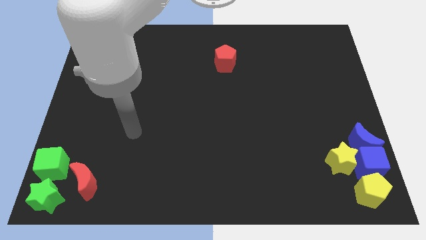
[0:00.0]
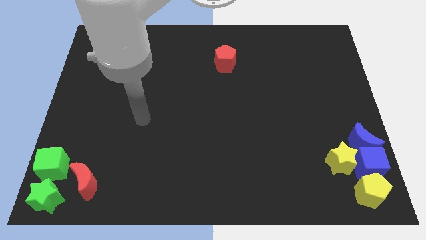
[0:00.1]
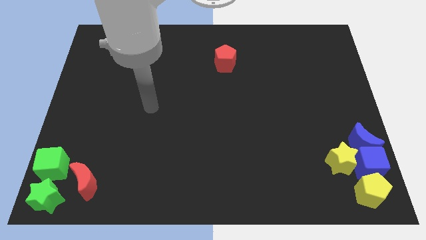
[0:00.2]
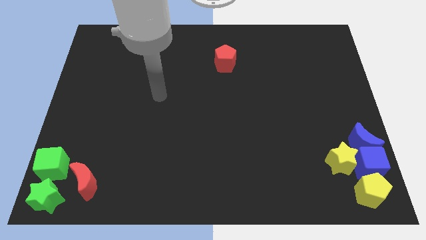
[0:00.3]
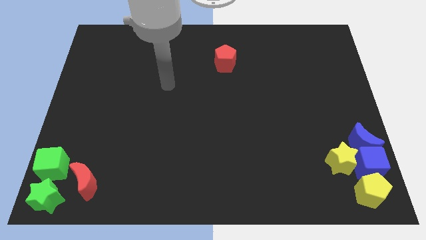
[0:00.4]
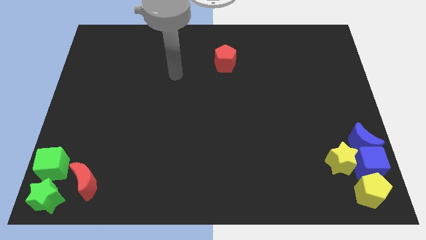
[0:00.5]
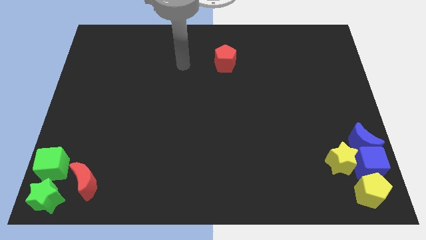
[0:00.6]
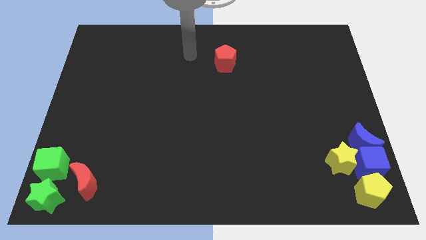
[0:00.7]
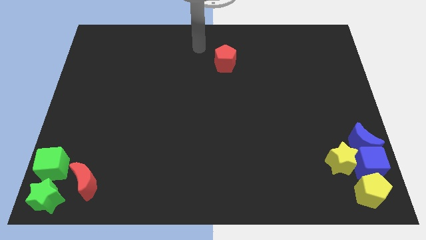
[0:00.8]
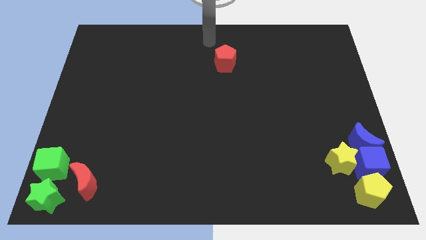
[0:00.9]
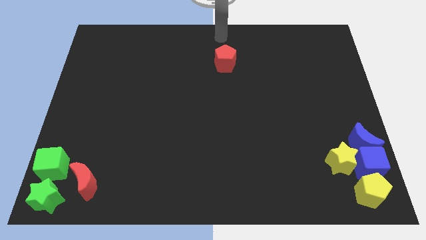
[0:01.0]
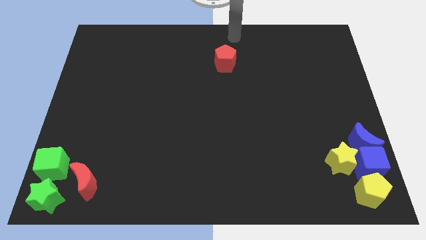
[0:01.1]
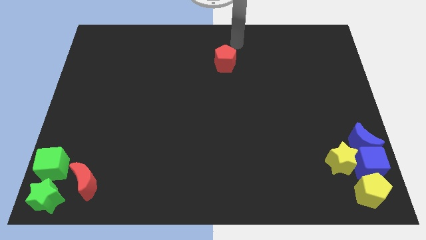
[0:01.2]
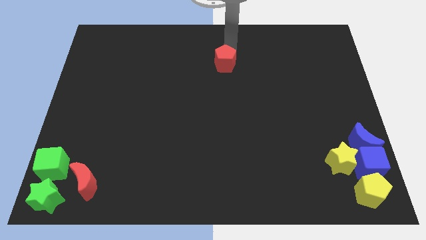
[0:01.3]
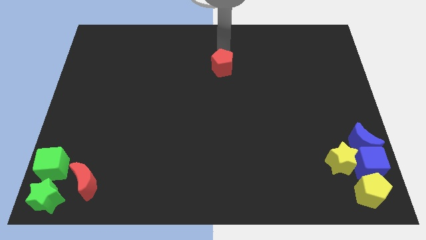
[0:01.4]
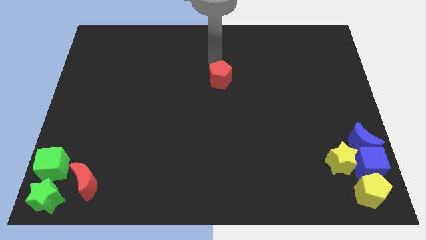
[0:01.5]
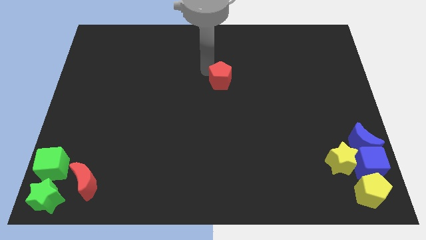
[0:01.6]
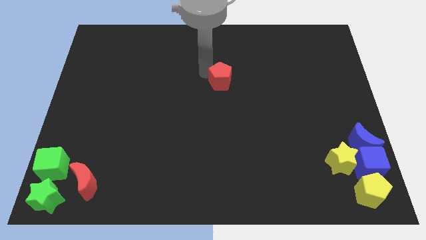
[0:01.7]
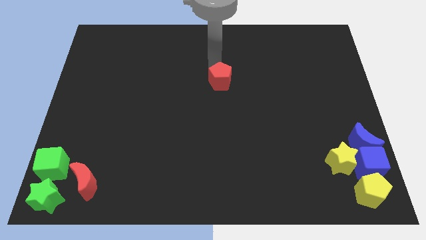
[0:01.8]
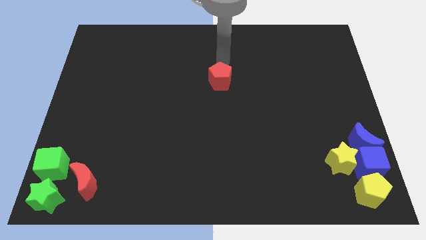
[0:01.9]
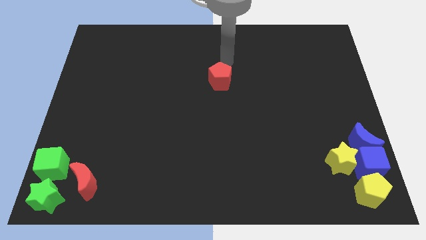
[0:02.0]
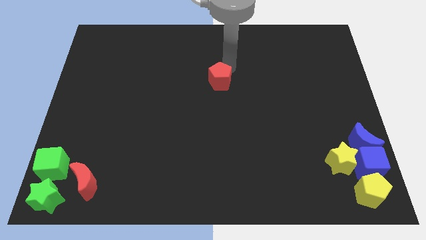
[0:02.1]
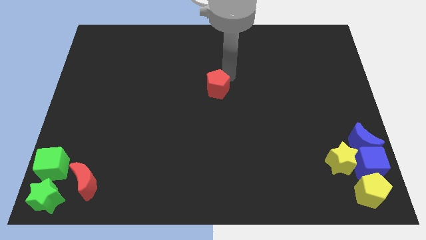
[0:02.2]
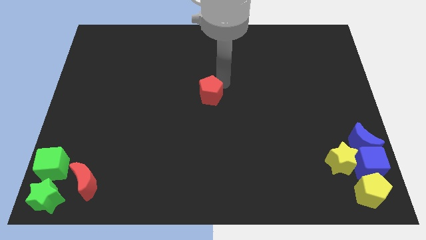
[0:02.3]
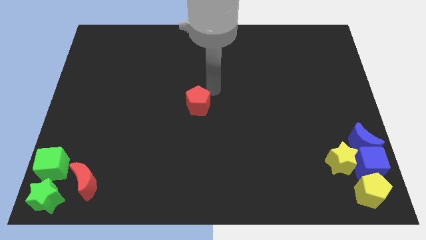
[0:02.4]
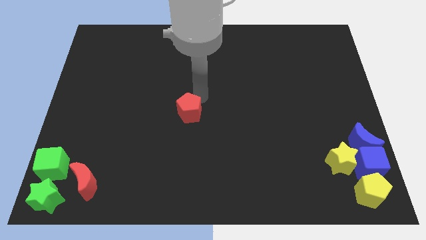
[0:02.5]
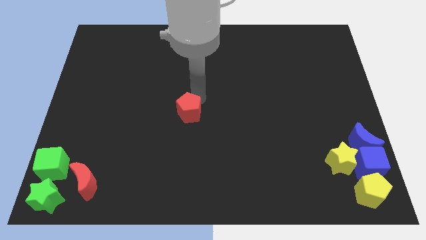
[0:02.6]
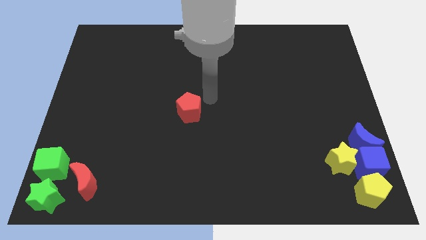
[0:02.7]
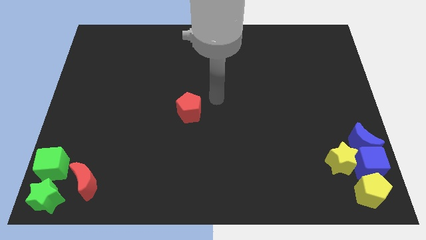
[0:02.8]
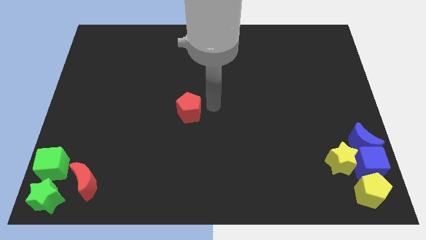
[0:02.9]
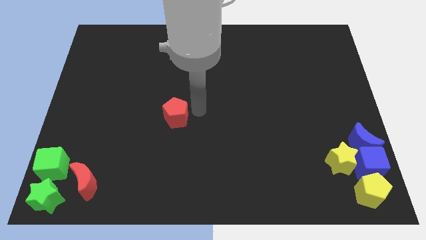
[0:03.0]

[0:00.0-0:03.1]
move red pentagon parallel to the green cube

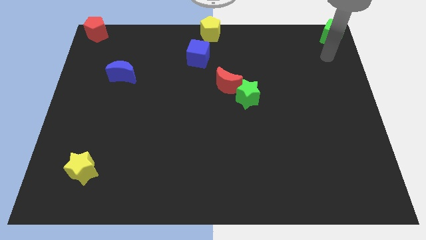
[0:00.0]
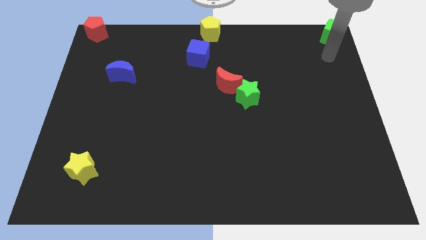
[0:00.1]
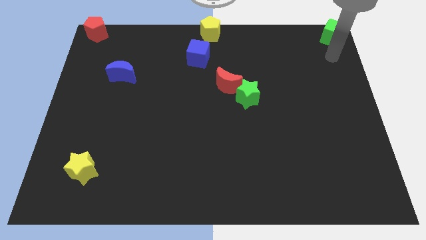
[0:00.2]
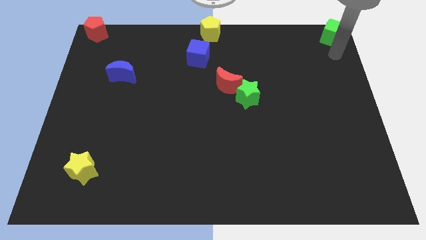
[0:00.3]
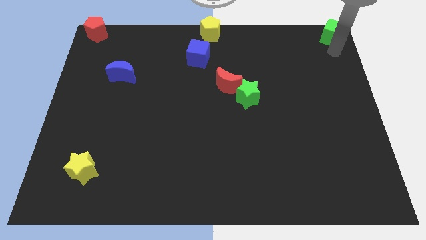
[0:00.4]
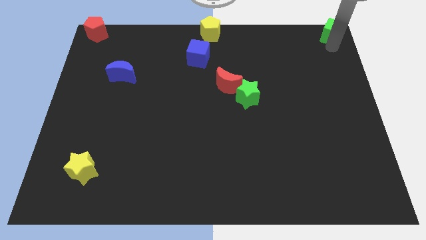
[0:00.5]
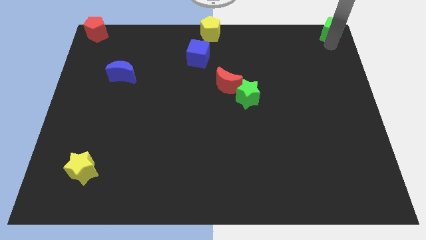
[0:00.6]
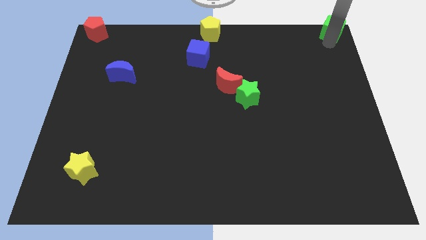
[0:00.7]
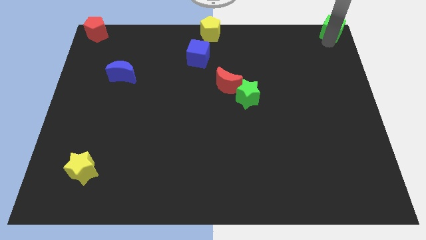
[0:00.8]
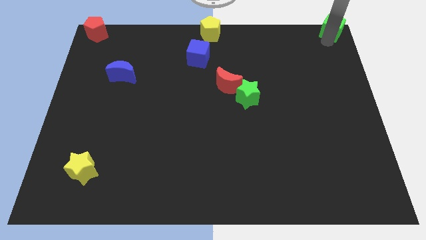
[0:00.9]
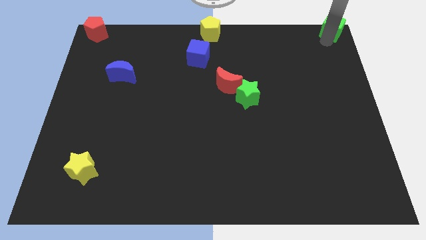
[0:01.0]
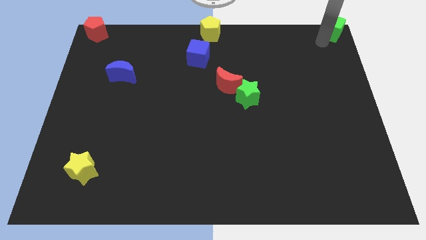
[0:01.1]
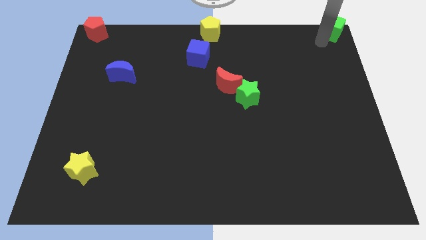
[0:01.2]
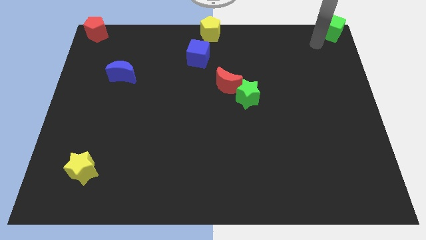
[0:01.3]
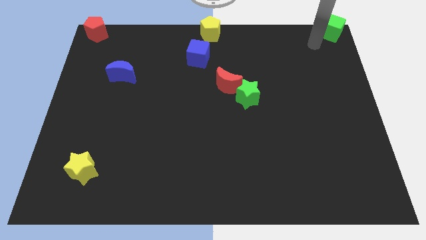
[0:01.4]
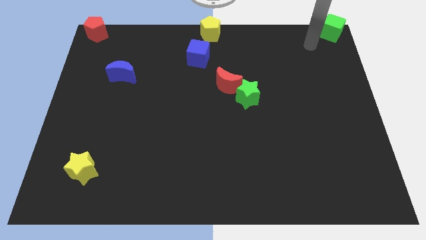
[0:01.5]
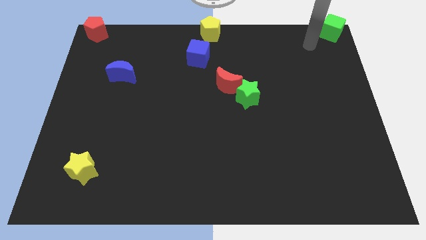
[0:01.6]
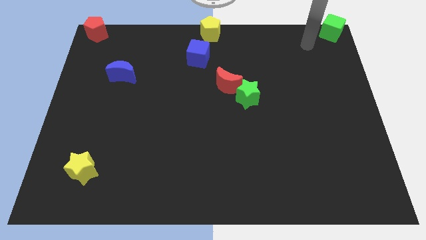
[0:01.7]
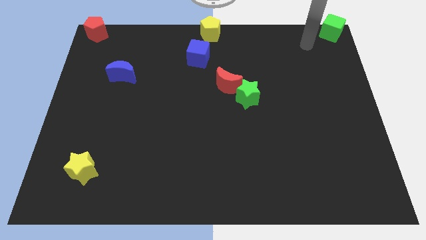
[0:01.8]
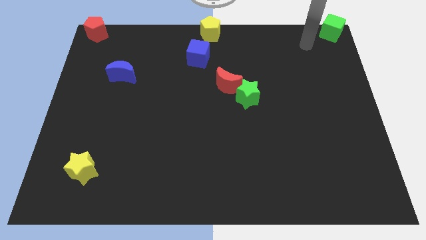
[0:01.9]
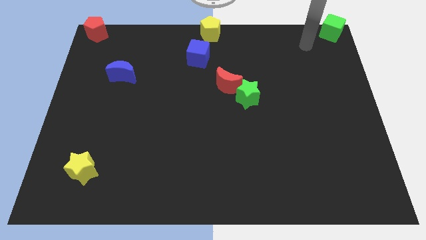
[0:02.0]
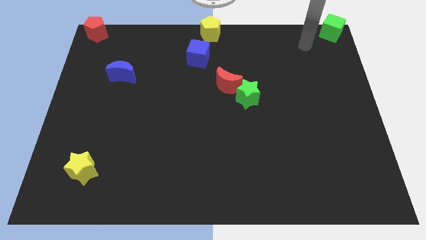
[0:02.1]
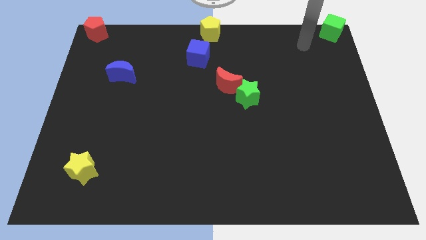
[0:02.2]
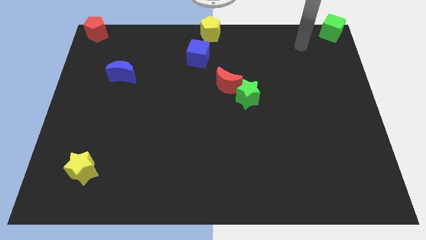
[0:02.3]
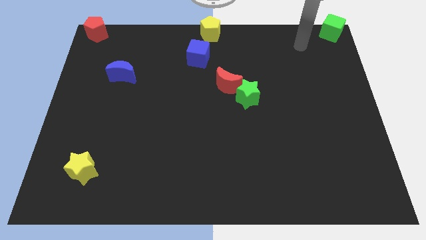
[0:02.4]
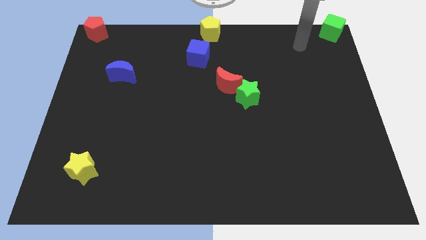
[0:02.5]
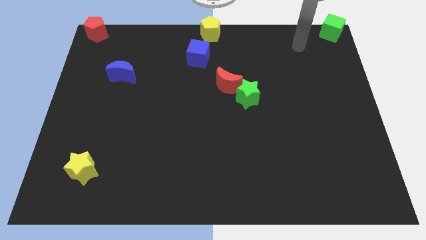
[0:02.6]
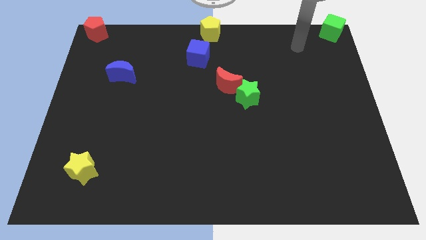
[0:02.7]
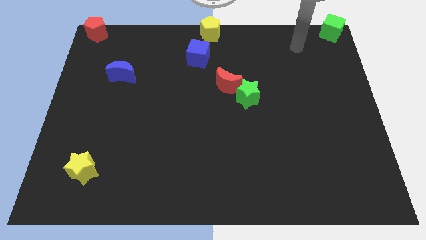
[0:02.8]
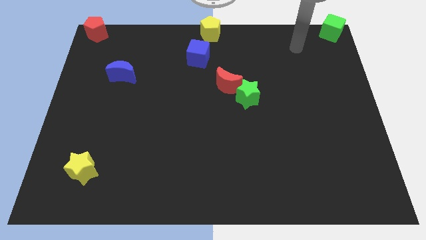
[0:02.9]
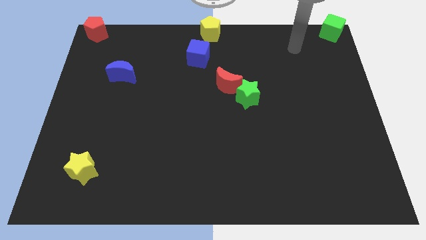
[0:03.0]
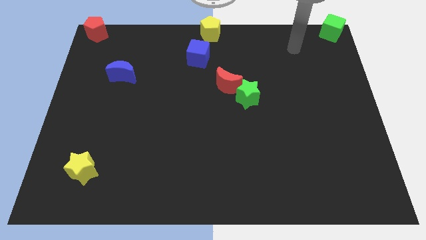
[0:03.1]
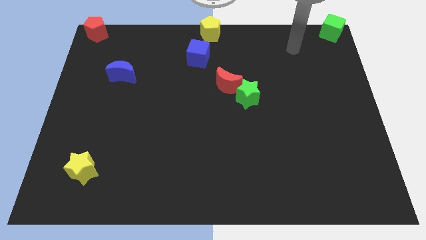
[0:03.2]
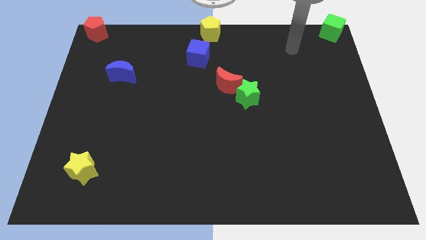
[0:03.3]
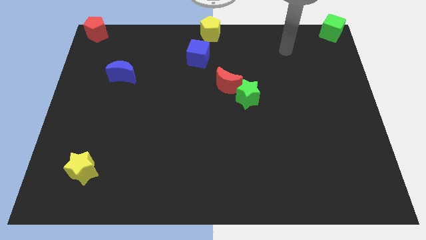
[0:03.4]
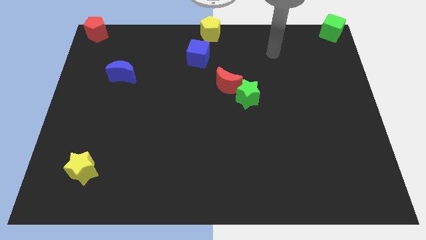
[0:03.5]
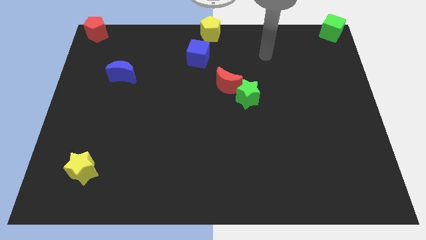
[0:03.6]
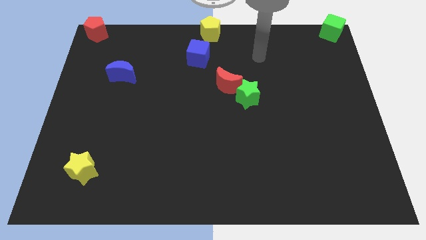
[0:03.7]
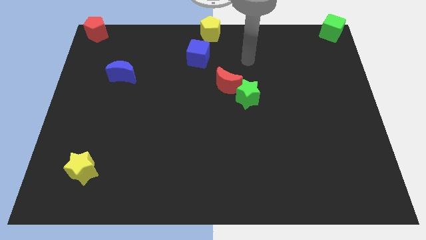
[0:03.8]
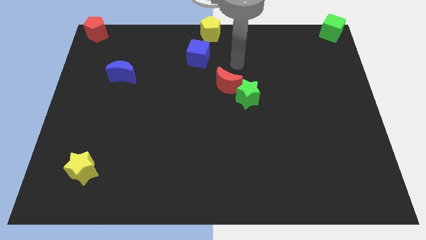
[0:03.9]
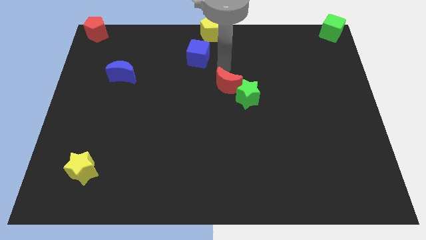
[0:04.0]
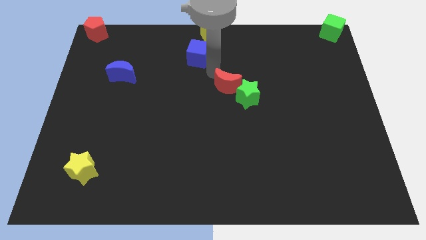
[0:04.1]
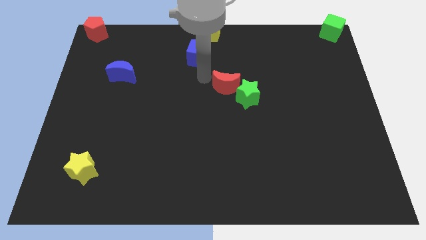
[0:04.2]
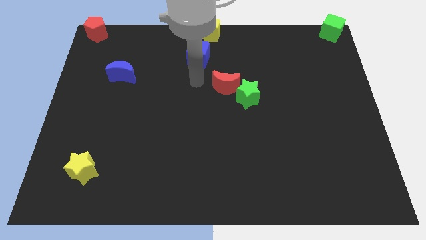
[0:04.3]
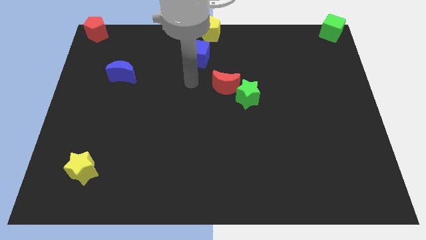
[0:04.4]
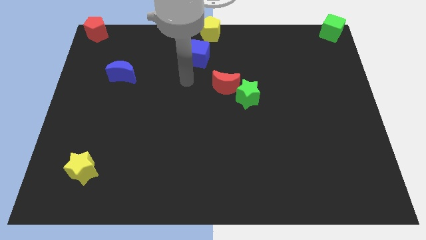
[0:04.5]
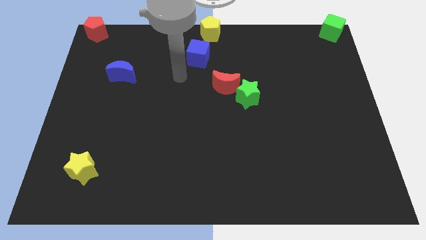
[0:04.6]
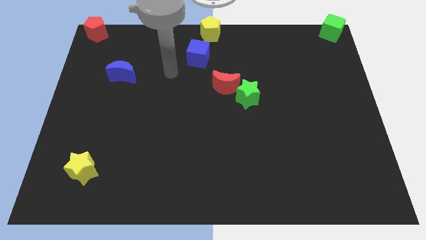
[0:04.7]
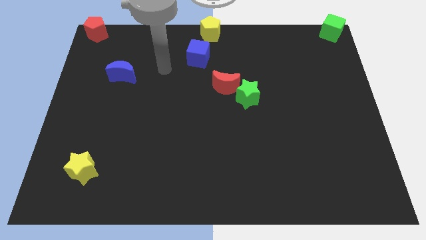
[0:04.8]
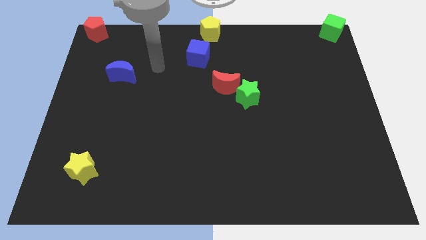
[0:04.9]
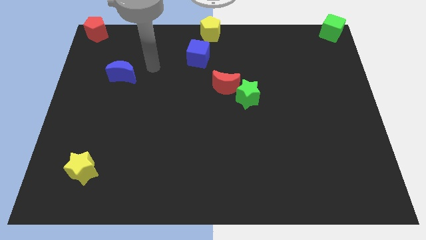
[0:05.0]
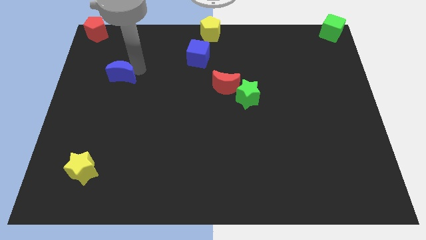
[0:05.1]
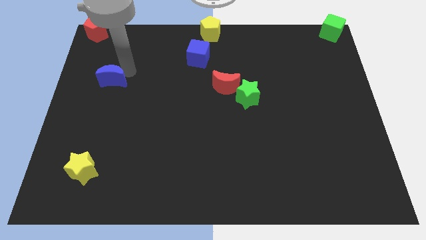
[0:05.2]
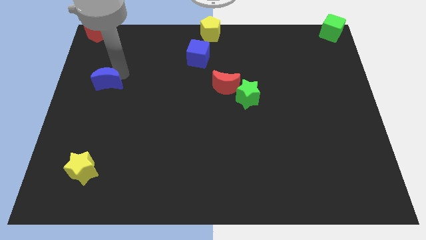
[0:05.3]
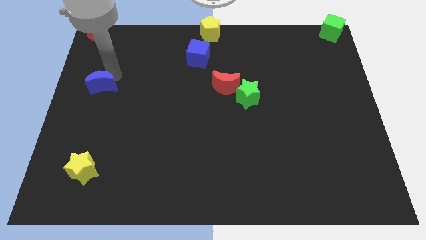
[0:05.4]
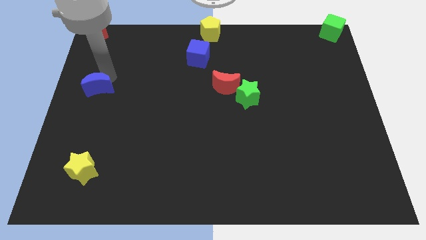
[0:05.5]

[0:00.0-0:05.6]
move your arm away from the green cube
